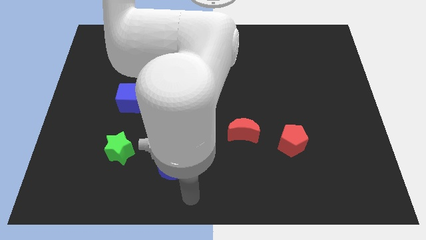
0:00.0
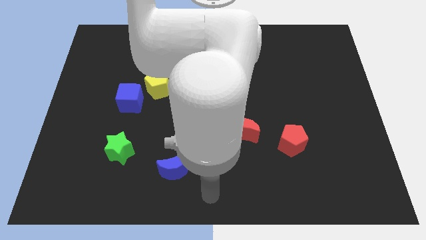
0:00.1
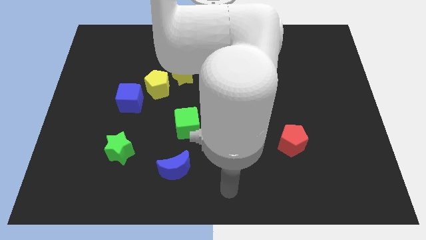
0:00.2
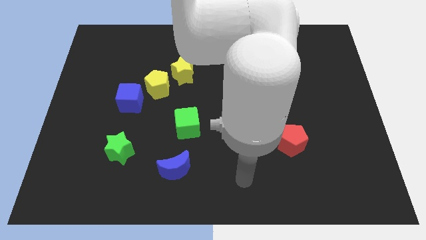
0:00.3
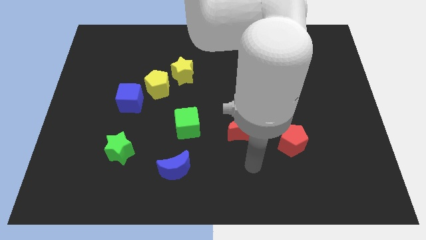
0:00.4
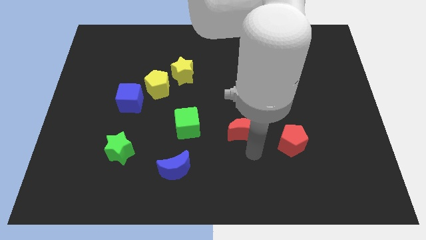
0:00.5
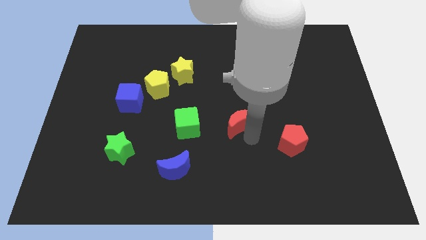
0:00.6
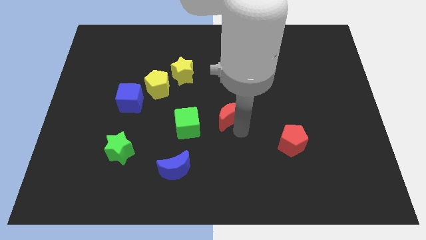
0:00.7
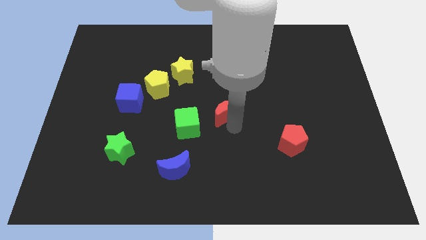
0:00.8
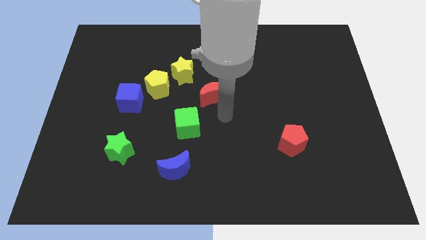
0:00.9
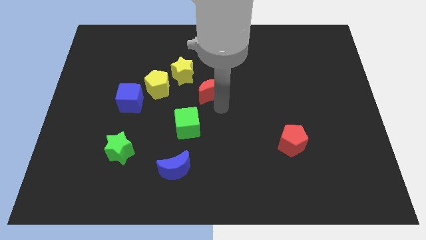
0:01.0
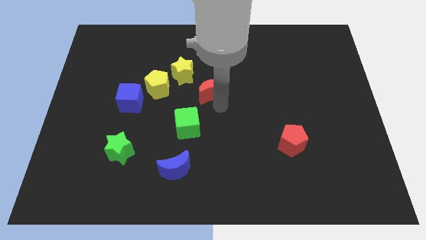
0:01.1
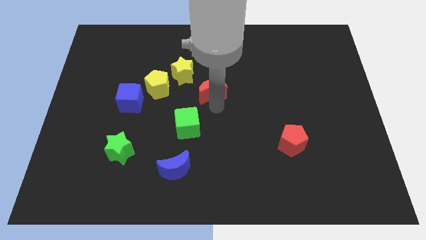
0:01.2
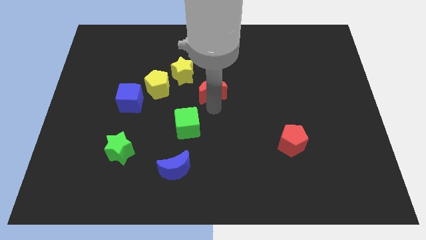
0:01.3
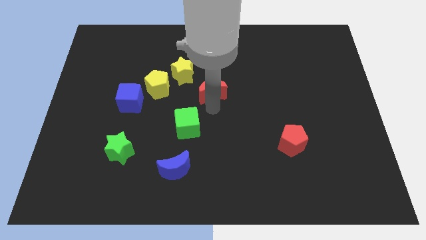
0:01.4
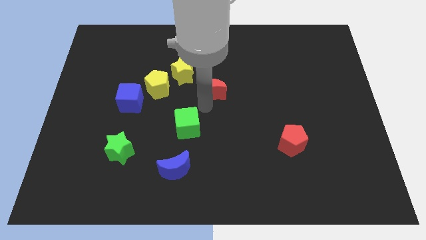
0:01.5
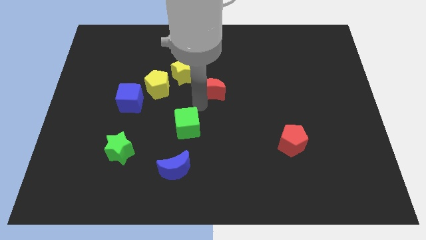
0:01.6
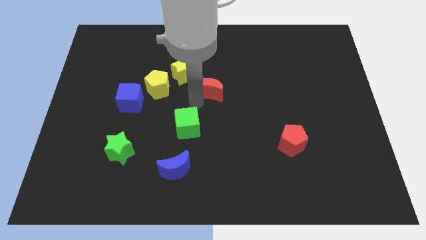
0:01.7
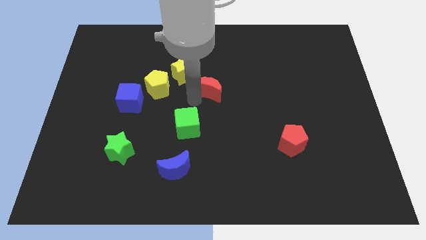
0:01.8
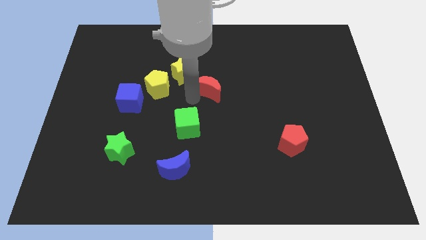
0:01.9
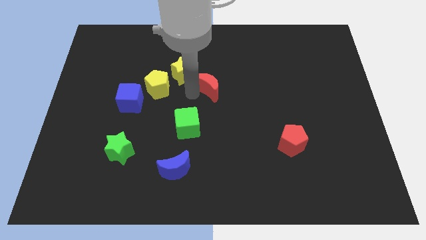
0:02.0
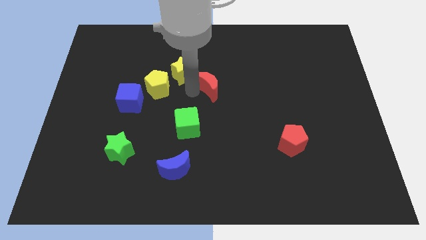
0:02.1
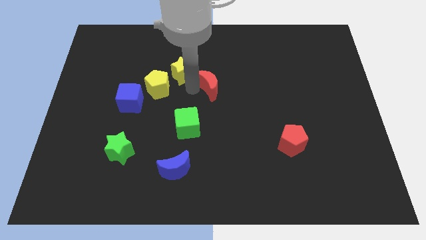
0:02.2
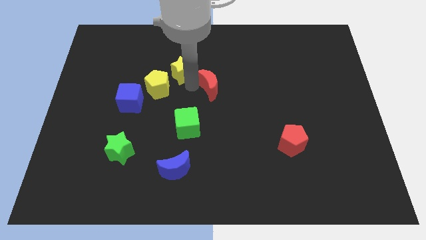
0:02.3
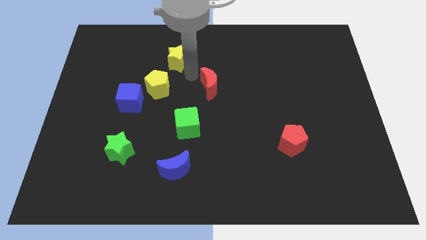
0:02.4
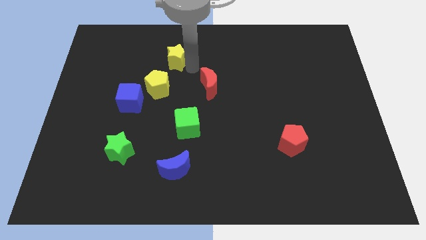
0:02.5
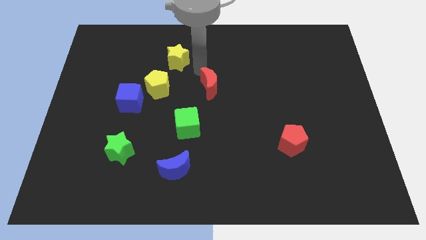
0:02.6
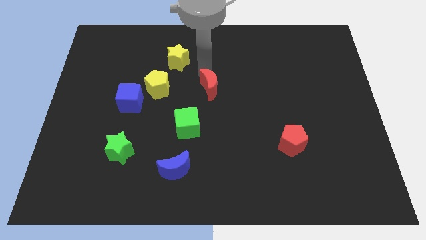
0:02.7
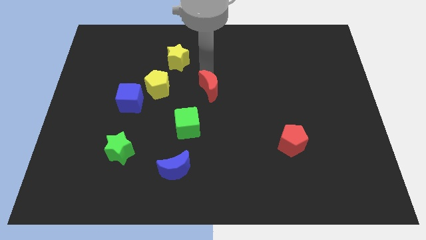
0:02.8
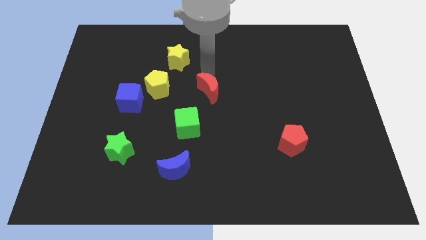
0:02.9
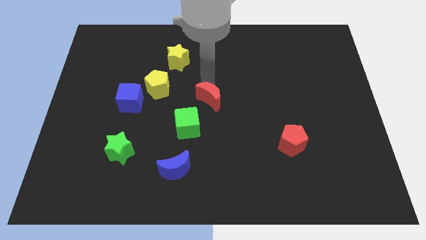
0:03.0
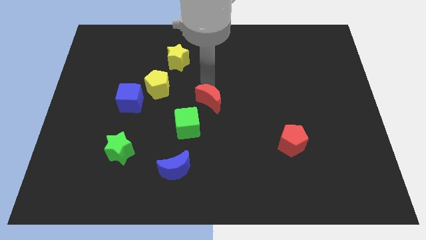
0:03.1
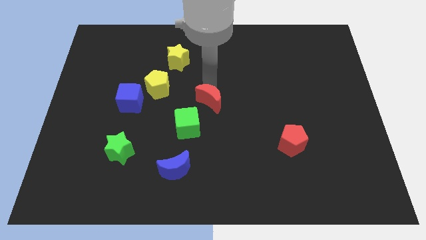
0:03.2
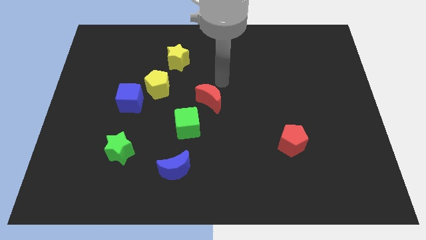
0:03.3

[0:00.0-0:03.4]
push the red crescent towards the center of the board

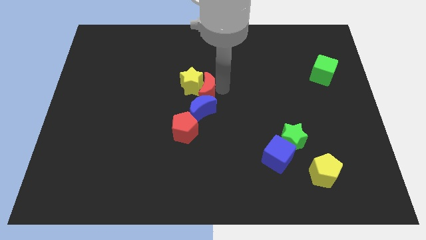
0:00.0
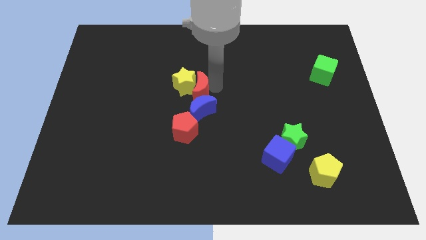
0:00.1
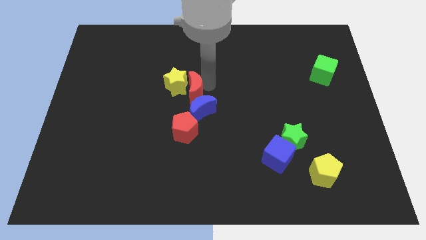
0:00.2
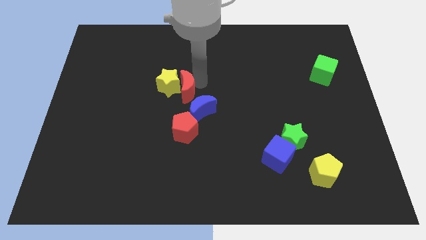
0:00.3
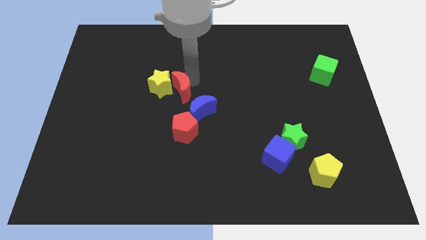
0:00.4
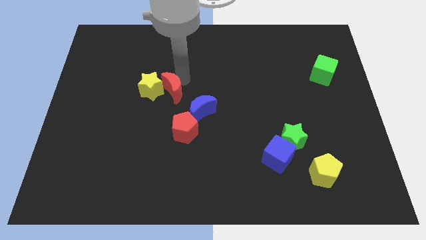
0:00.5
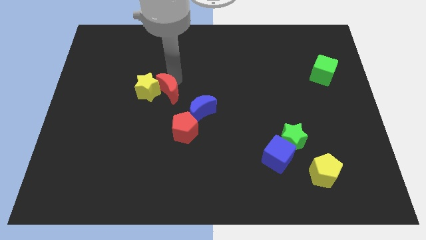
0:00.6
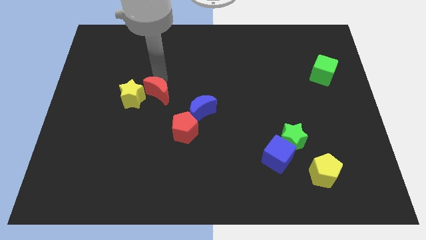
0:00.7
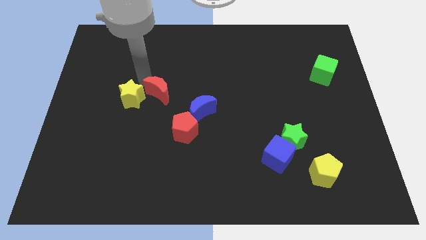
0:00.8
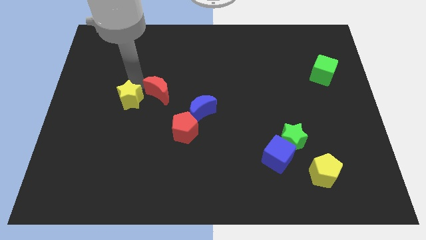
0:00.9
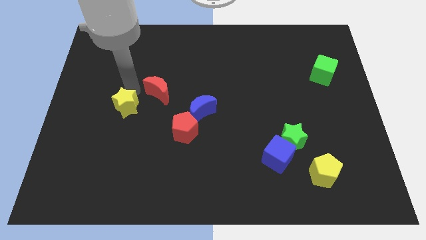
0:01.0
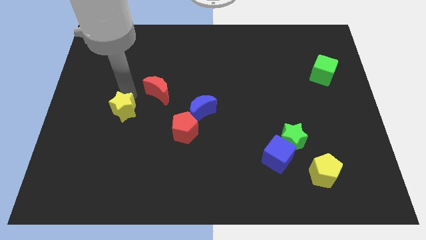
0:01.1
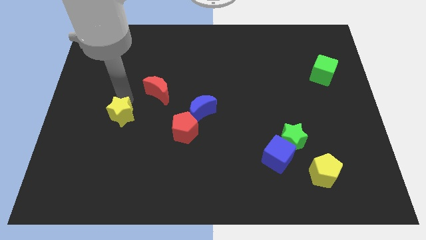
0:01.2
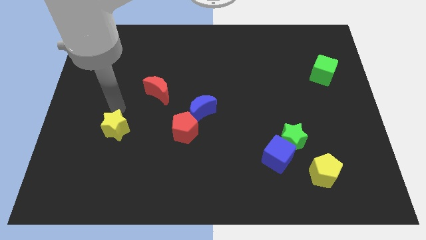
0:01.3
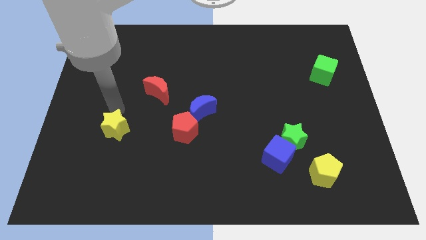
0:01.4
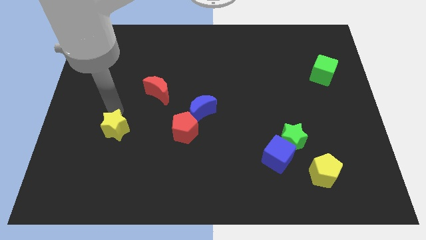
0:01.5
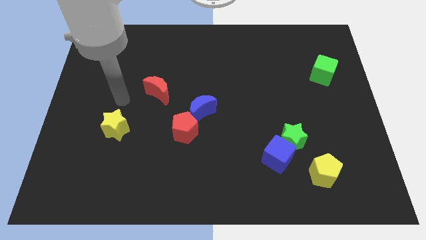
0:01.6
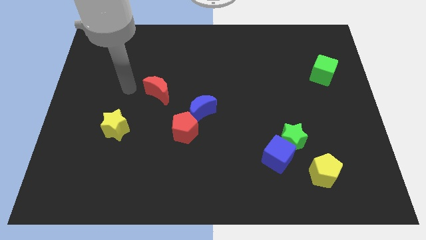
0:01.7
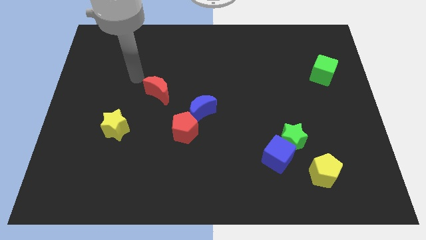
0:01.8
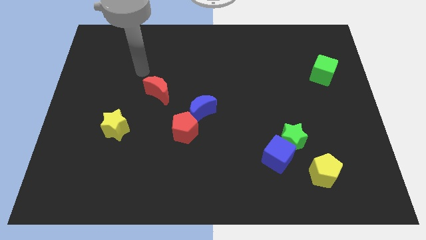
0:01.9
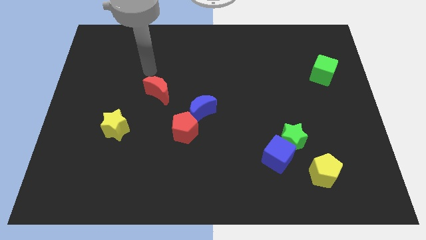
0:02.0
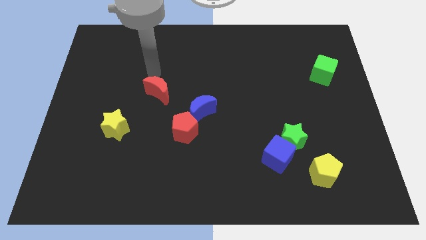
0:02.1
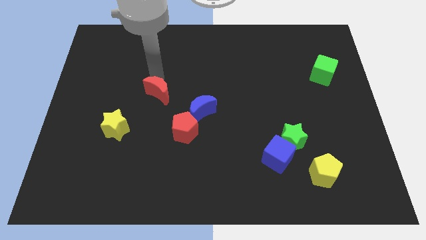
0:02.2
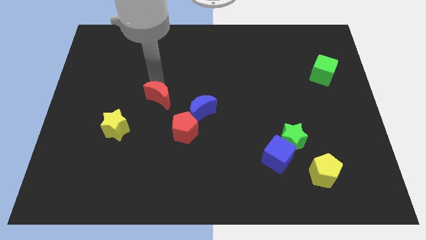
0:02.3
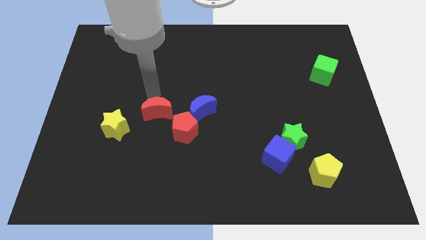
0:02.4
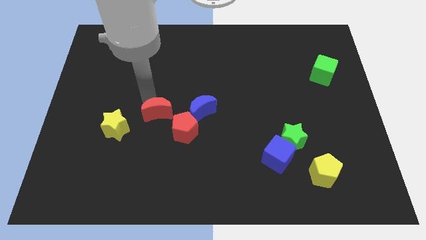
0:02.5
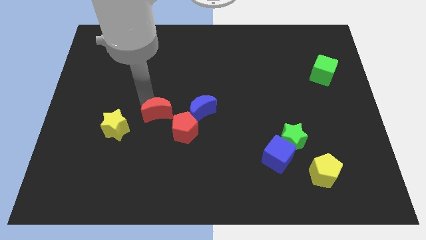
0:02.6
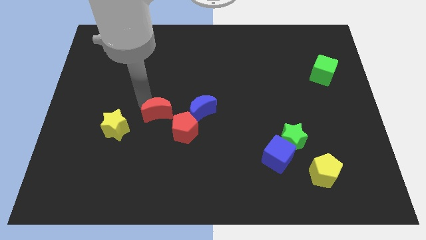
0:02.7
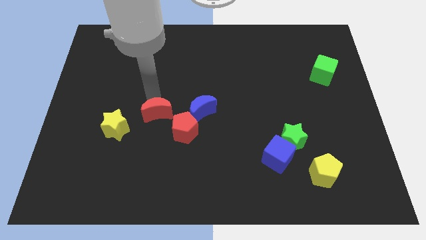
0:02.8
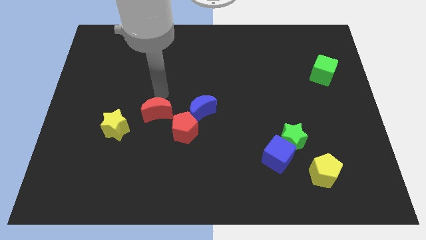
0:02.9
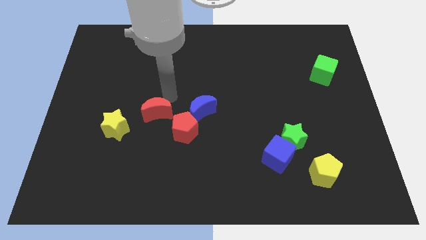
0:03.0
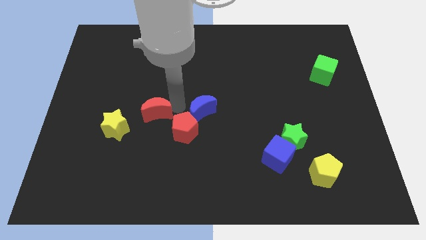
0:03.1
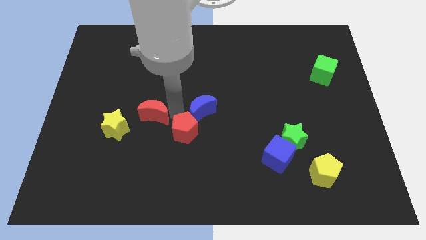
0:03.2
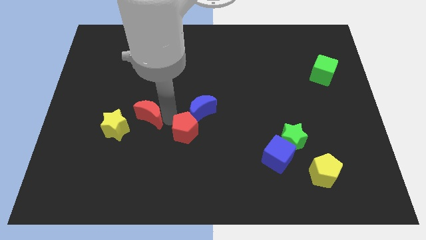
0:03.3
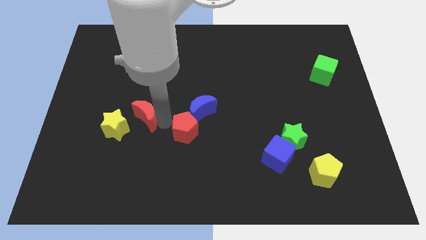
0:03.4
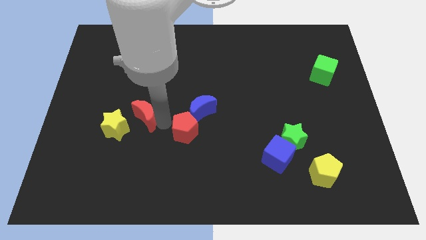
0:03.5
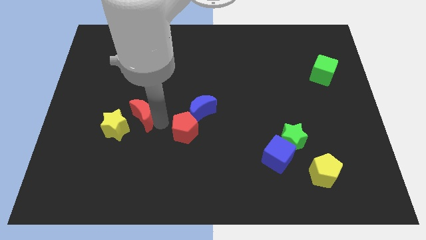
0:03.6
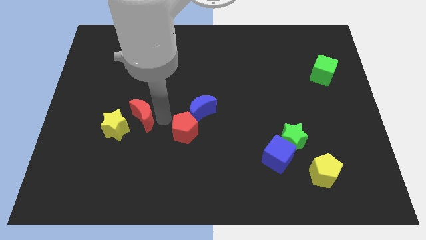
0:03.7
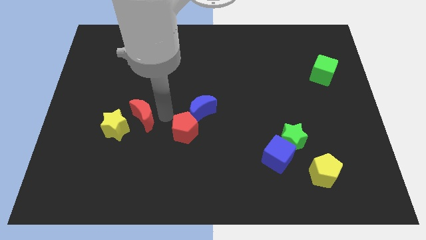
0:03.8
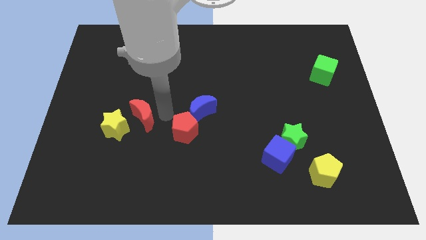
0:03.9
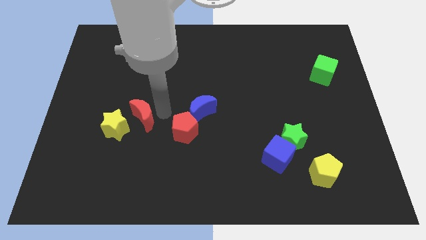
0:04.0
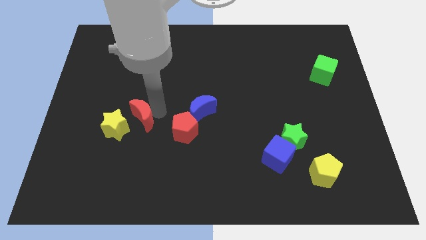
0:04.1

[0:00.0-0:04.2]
move the red moon diagonal to the yellow star

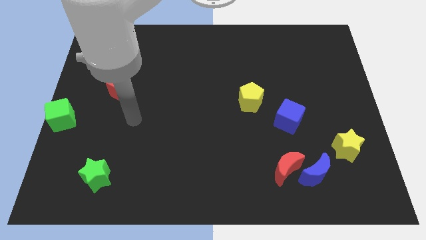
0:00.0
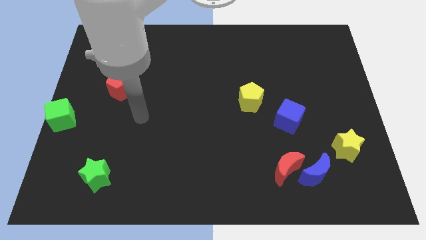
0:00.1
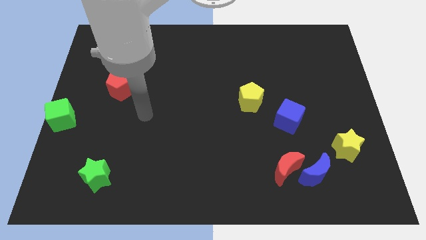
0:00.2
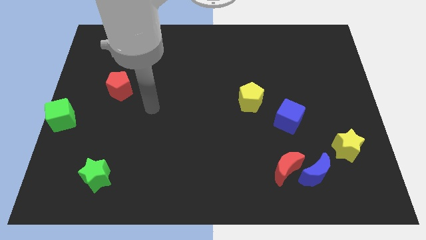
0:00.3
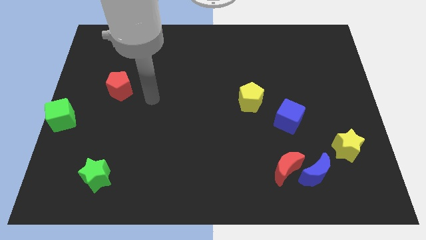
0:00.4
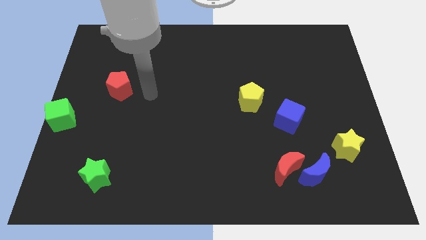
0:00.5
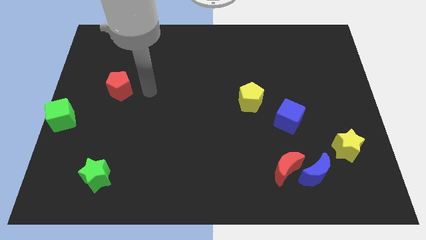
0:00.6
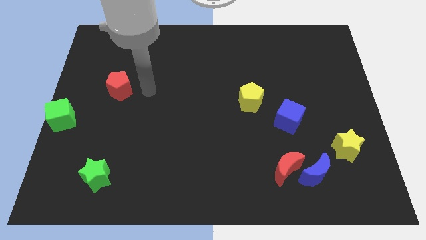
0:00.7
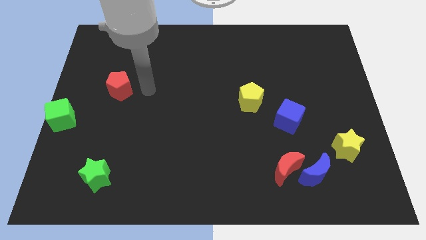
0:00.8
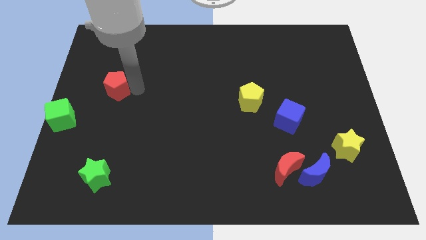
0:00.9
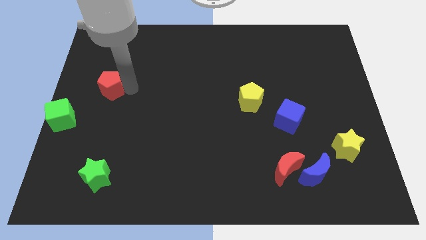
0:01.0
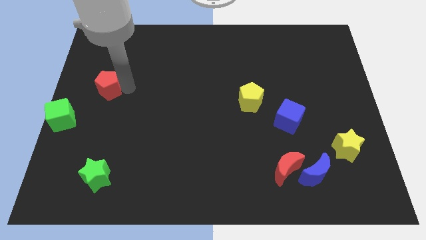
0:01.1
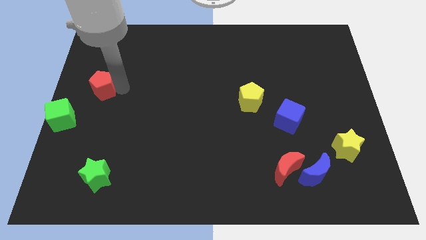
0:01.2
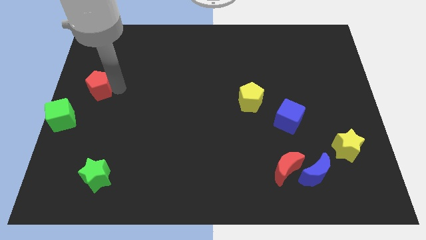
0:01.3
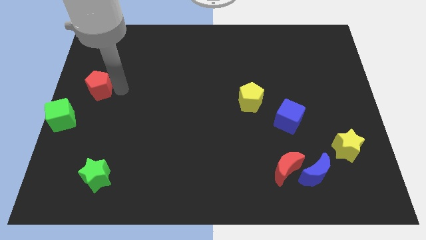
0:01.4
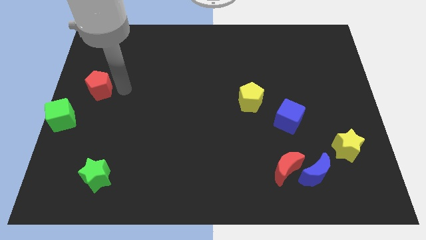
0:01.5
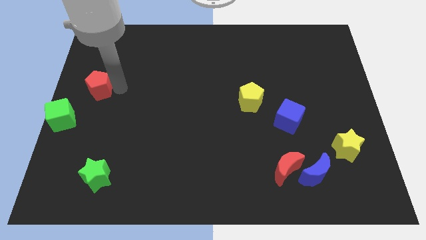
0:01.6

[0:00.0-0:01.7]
place the red pentagon diagonal to the green cube
